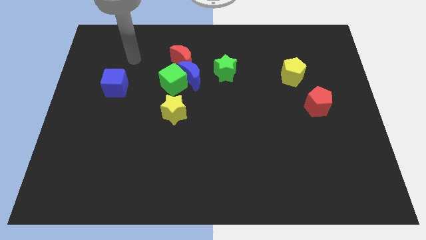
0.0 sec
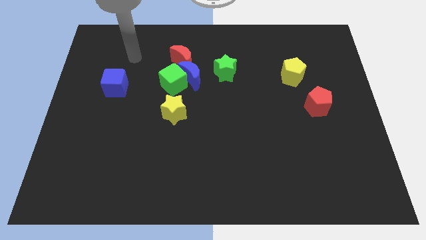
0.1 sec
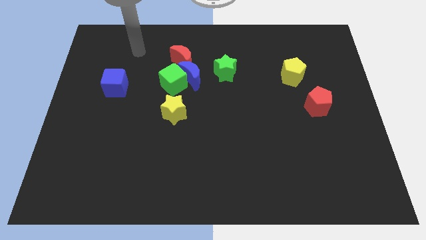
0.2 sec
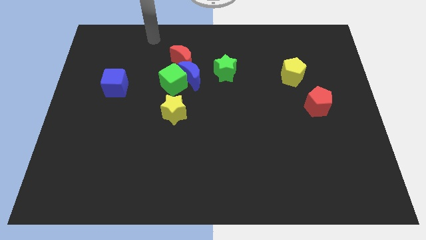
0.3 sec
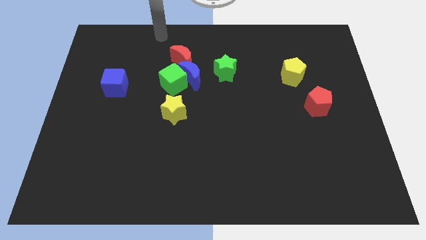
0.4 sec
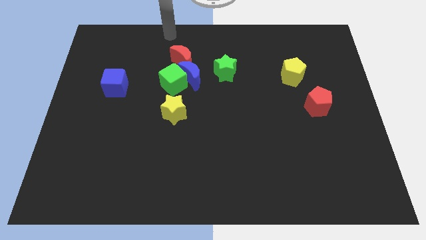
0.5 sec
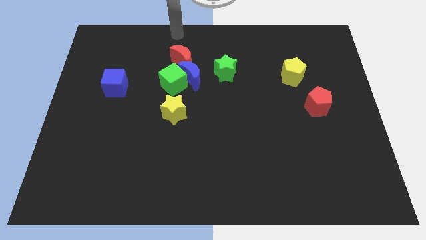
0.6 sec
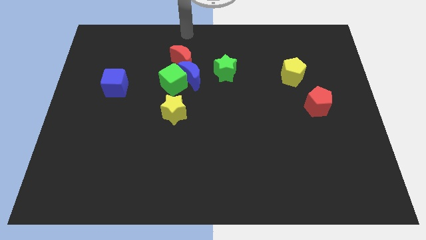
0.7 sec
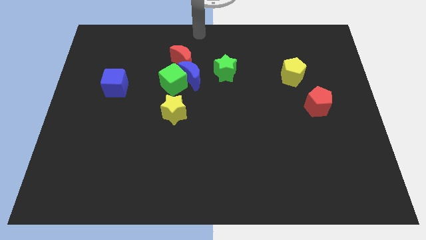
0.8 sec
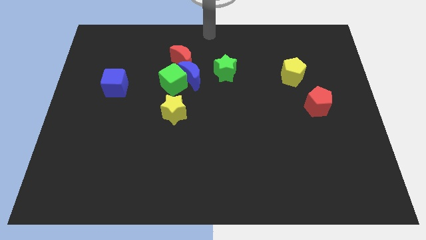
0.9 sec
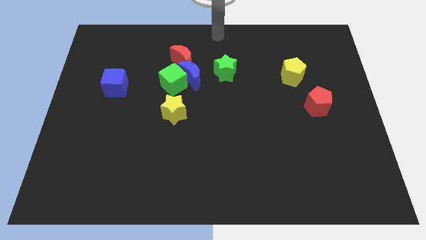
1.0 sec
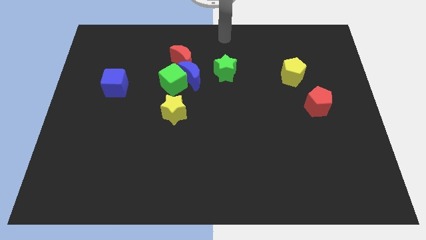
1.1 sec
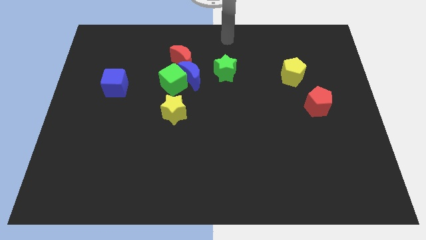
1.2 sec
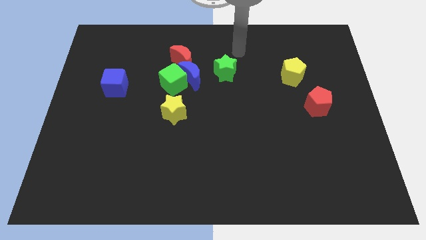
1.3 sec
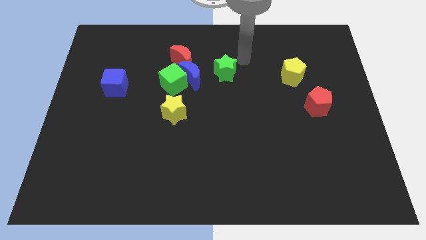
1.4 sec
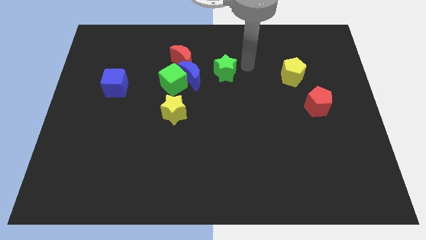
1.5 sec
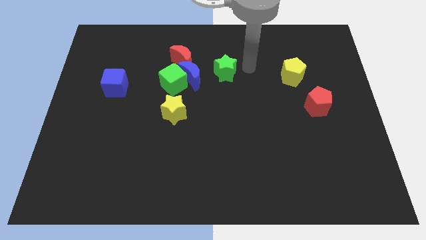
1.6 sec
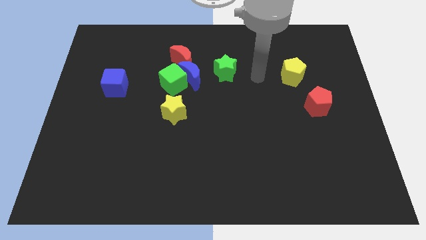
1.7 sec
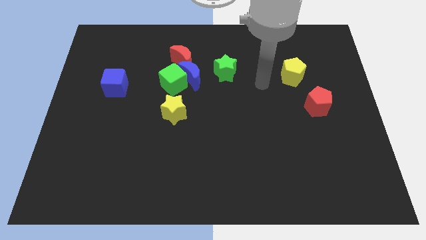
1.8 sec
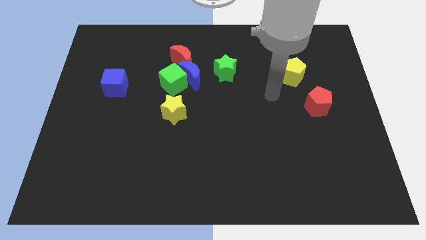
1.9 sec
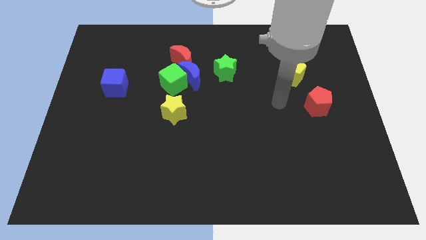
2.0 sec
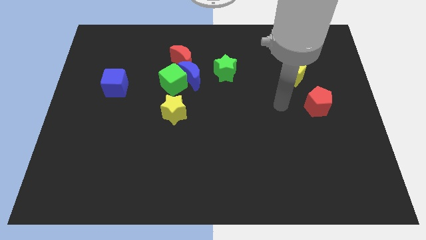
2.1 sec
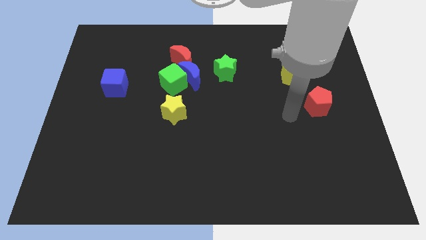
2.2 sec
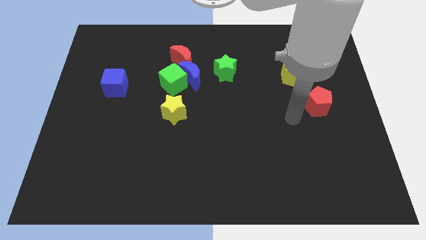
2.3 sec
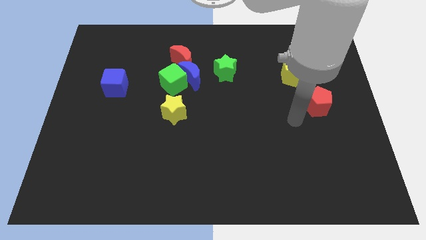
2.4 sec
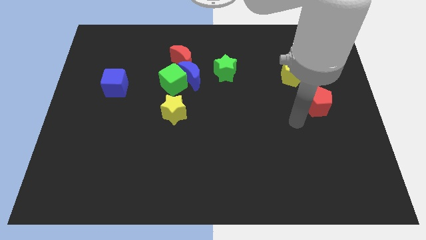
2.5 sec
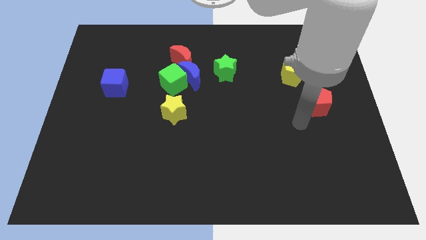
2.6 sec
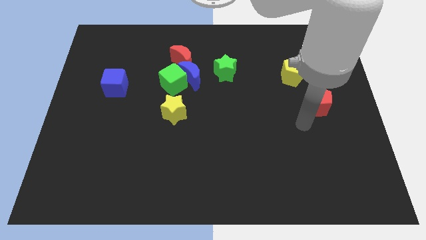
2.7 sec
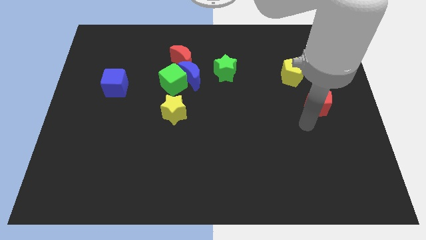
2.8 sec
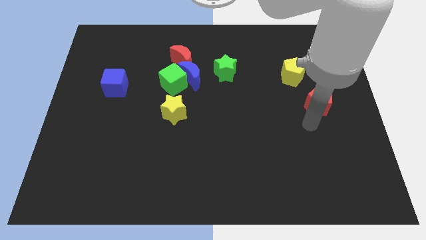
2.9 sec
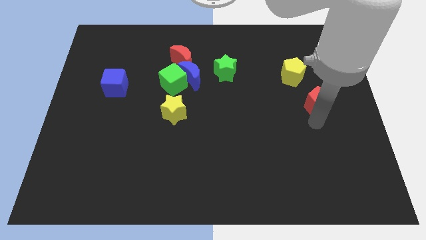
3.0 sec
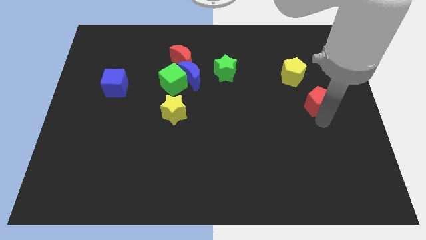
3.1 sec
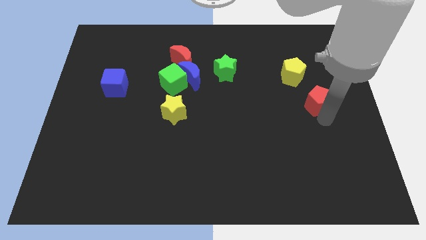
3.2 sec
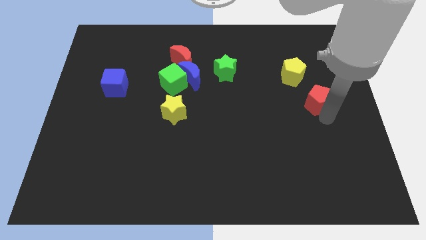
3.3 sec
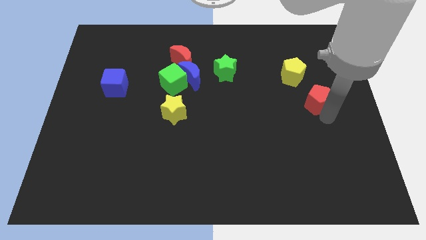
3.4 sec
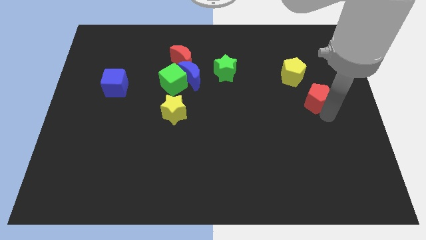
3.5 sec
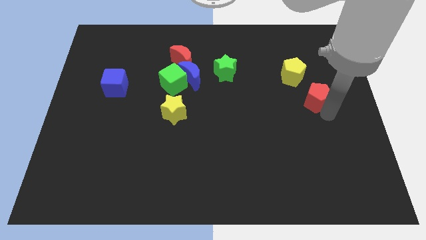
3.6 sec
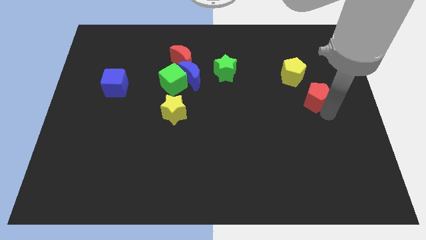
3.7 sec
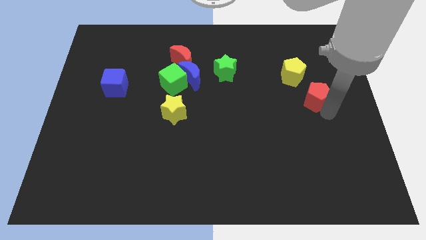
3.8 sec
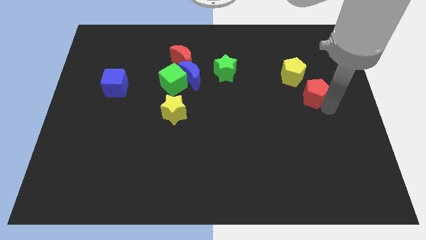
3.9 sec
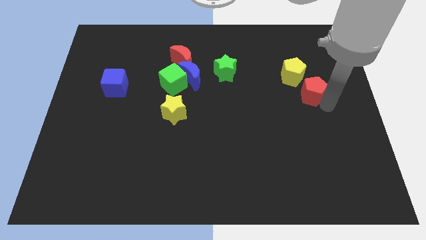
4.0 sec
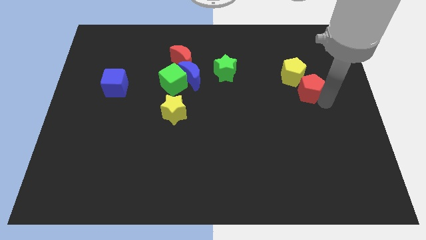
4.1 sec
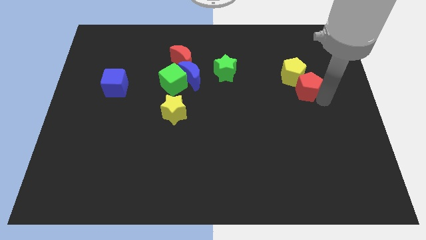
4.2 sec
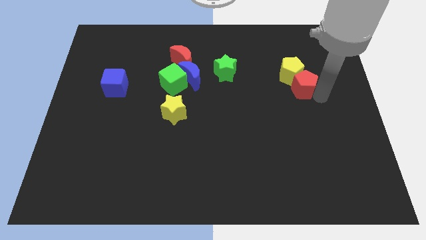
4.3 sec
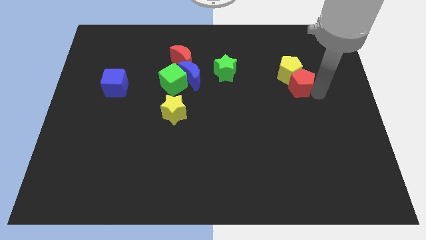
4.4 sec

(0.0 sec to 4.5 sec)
push the red pentagon next to the yellow pentagon

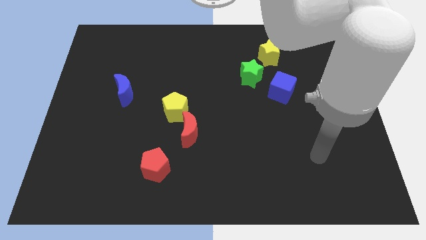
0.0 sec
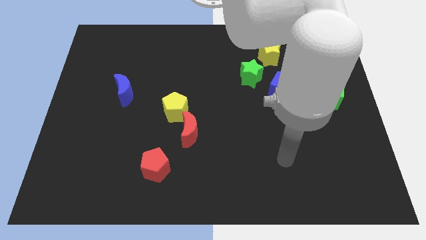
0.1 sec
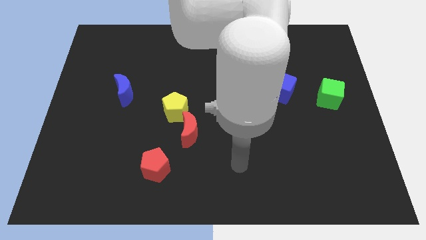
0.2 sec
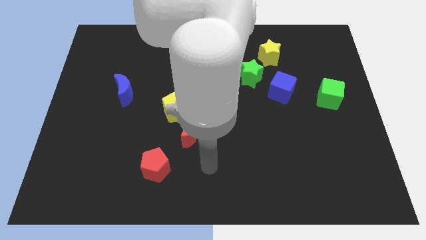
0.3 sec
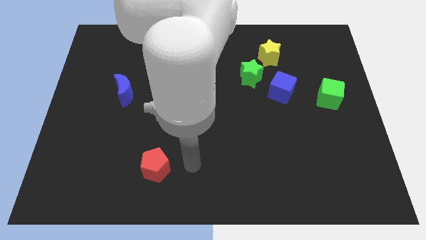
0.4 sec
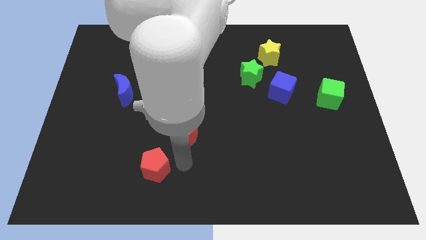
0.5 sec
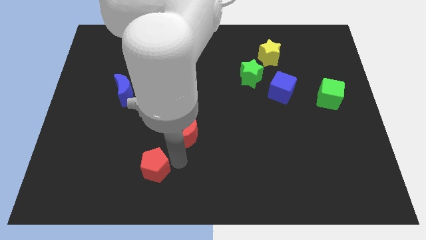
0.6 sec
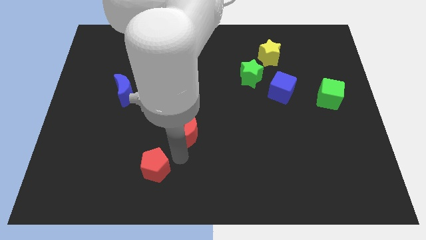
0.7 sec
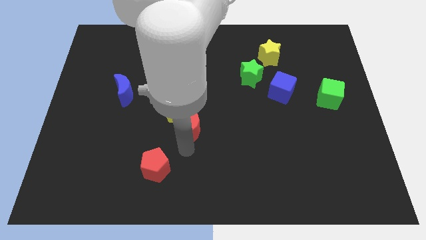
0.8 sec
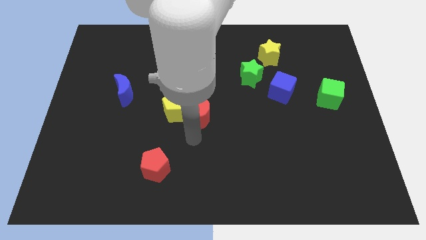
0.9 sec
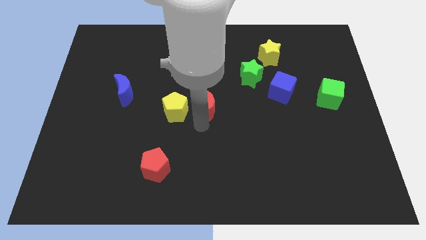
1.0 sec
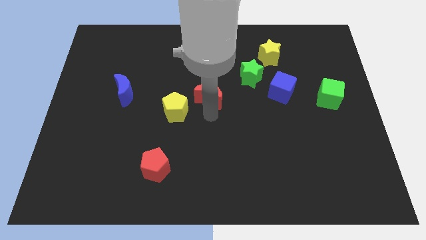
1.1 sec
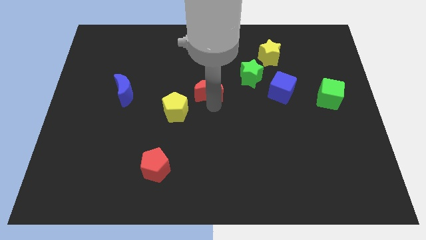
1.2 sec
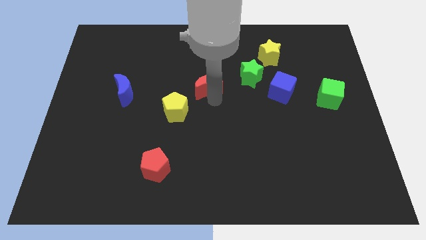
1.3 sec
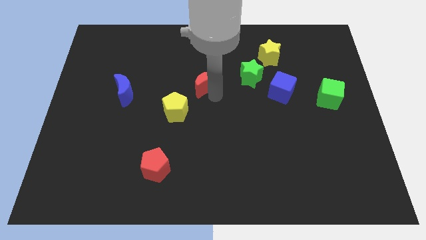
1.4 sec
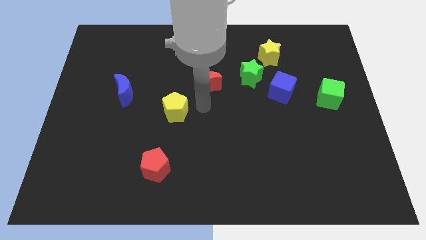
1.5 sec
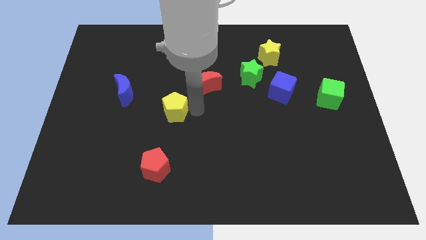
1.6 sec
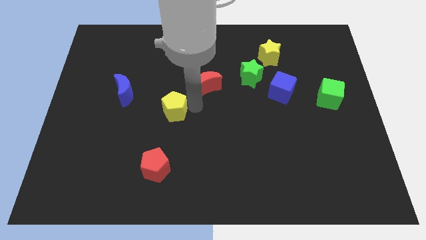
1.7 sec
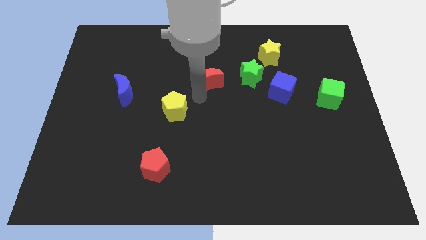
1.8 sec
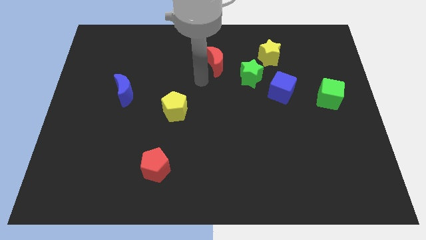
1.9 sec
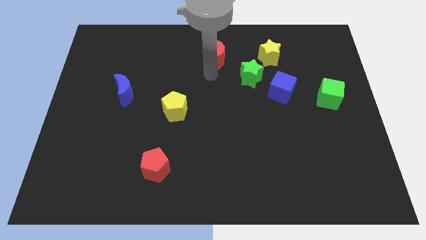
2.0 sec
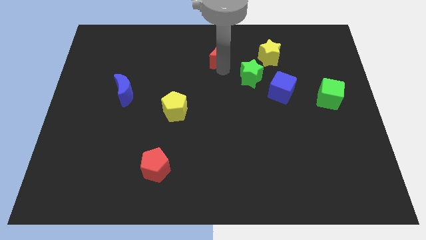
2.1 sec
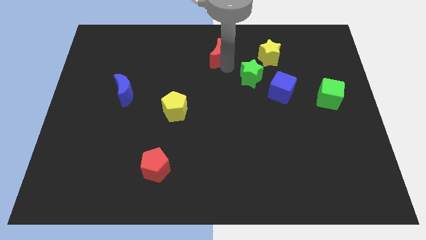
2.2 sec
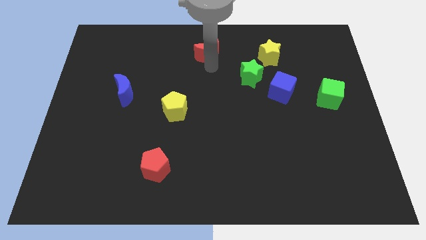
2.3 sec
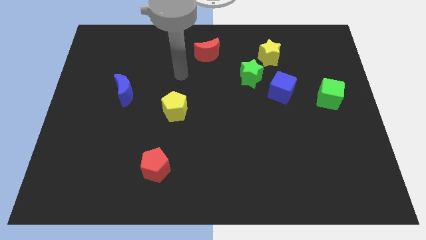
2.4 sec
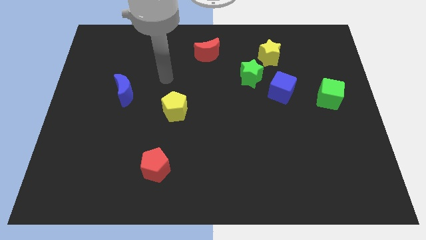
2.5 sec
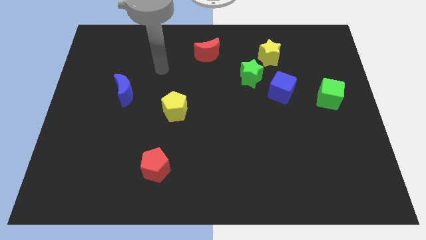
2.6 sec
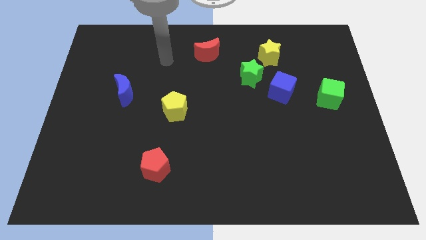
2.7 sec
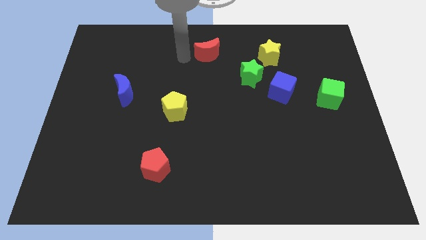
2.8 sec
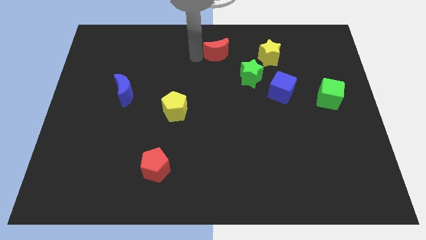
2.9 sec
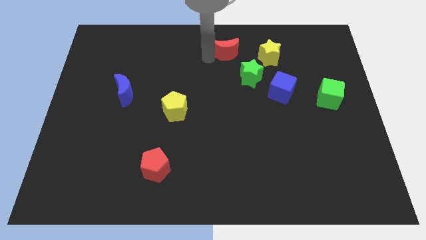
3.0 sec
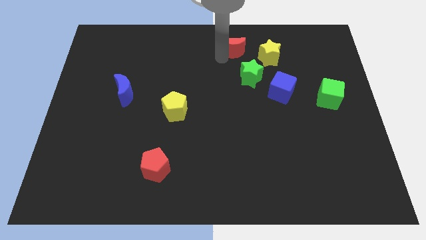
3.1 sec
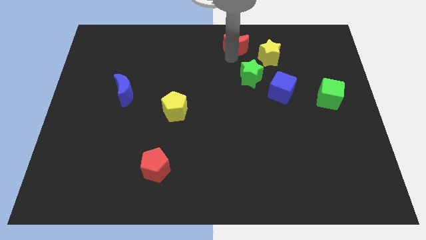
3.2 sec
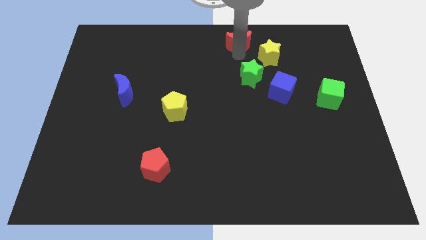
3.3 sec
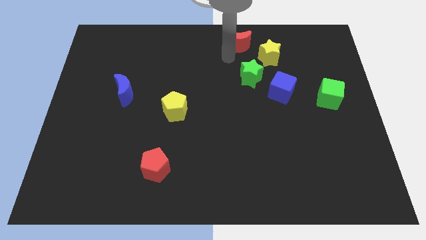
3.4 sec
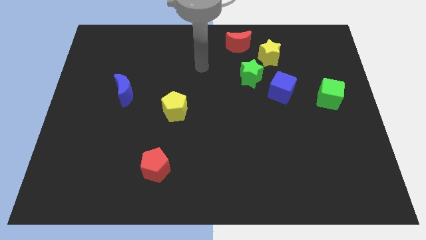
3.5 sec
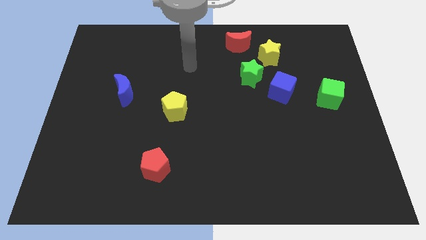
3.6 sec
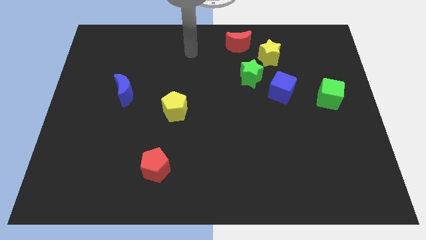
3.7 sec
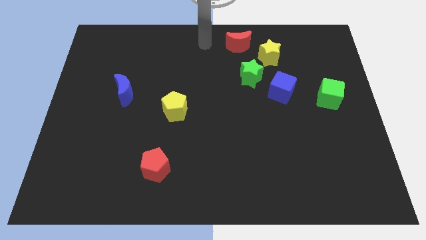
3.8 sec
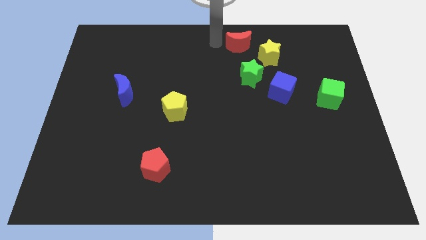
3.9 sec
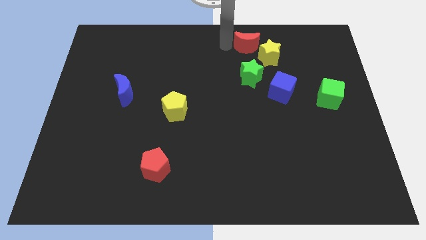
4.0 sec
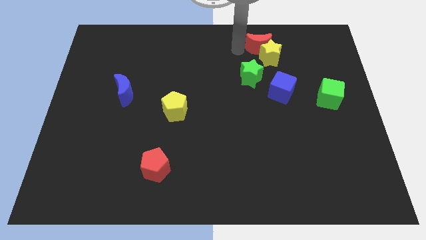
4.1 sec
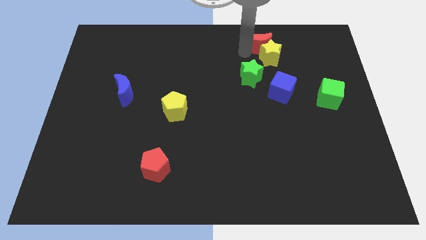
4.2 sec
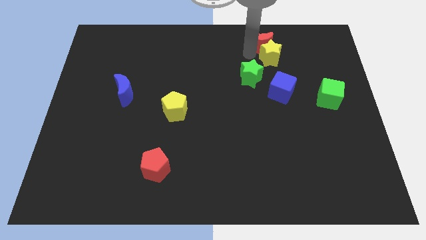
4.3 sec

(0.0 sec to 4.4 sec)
put the red moon close to the yellow star
